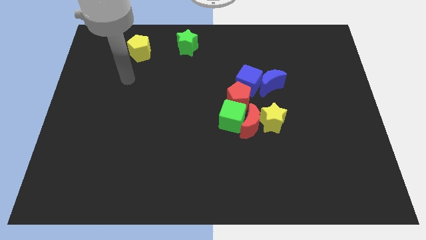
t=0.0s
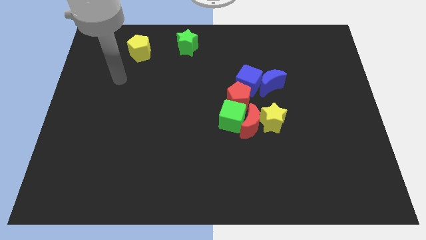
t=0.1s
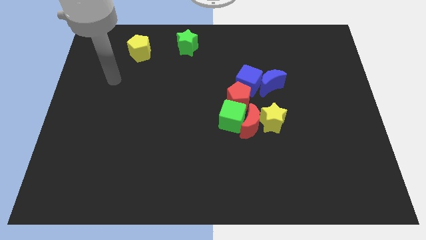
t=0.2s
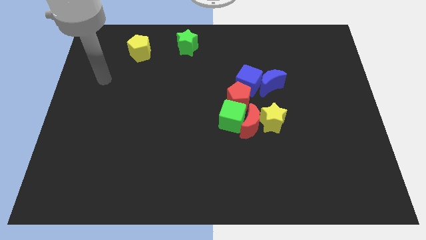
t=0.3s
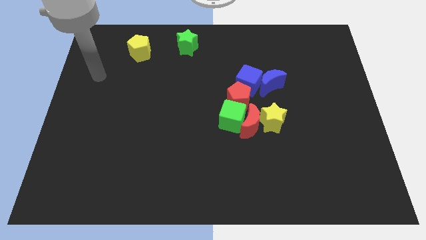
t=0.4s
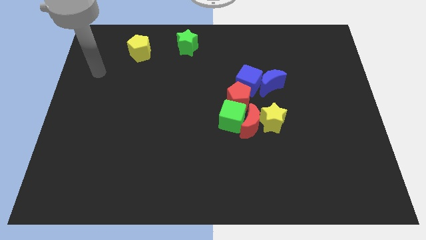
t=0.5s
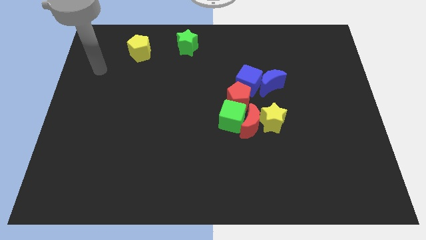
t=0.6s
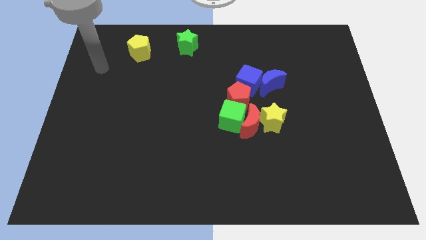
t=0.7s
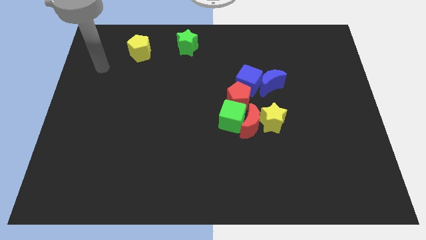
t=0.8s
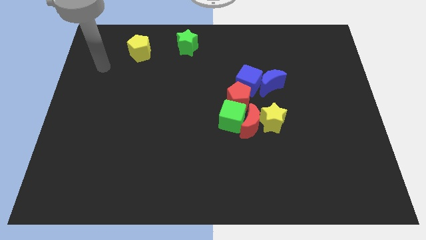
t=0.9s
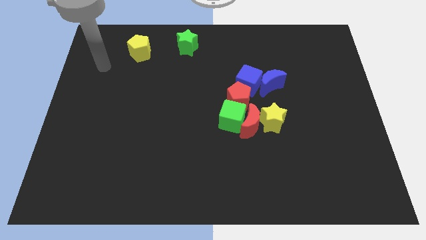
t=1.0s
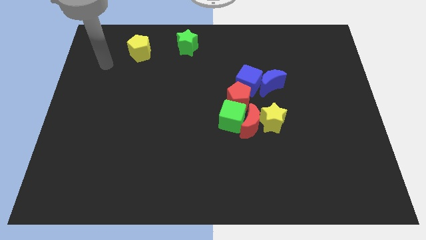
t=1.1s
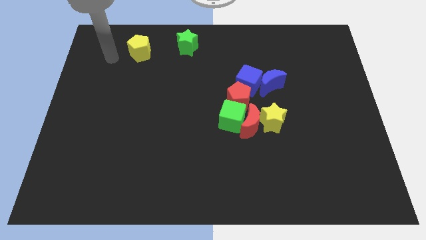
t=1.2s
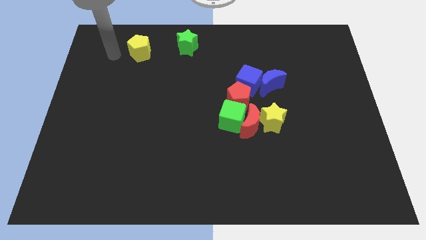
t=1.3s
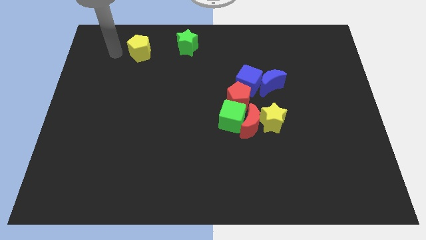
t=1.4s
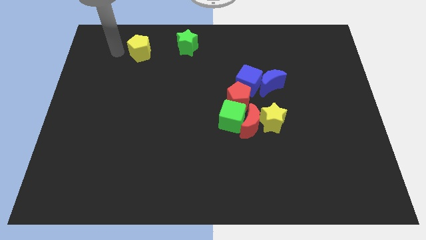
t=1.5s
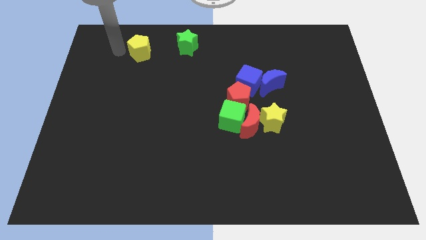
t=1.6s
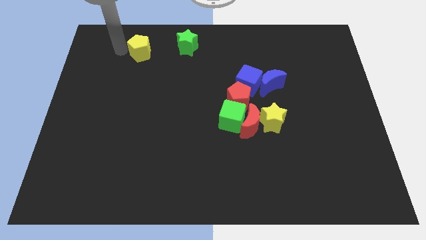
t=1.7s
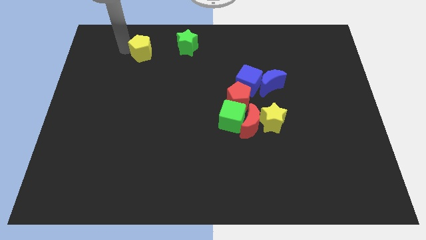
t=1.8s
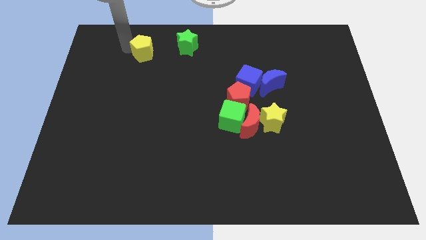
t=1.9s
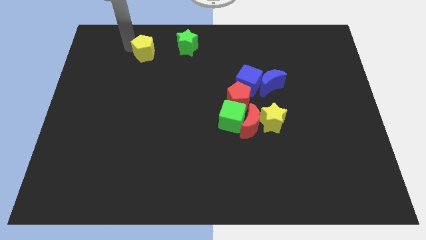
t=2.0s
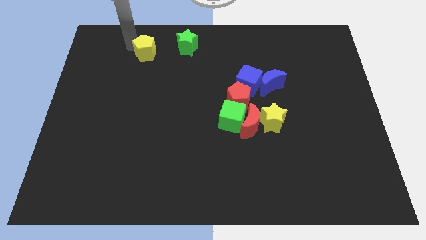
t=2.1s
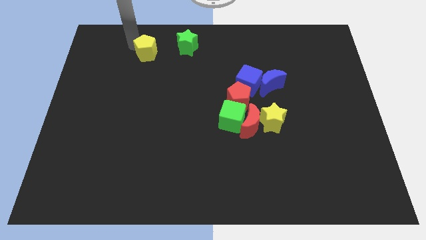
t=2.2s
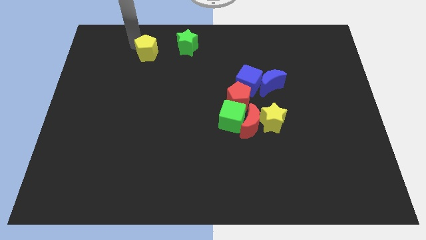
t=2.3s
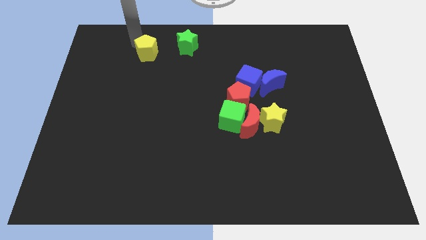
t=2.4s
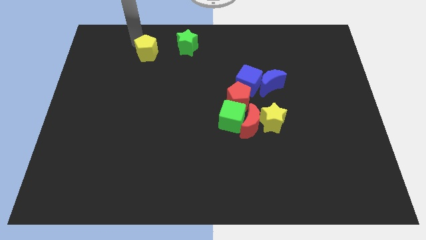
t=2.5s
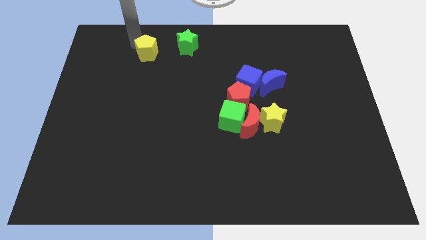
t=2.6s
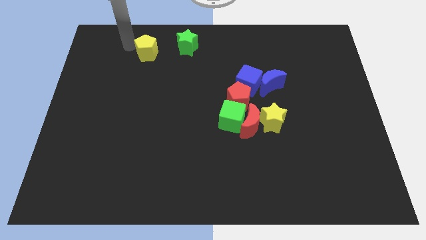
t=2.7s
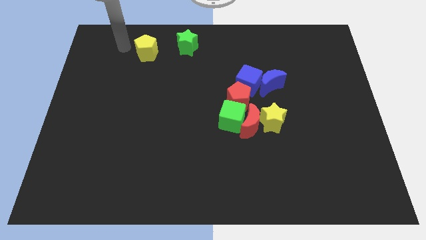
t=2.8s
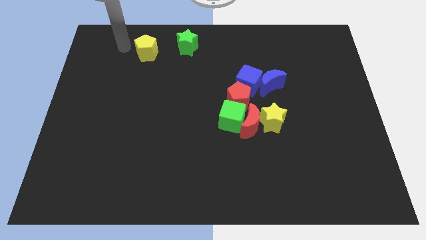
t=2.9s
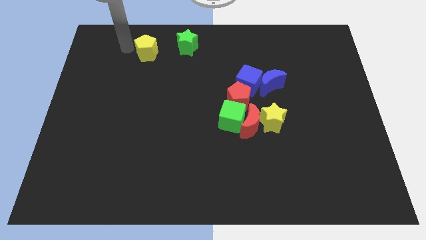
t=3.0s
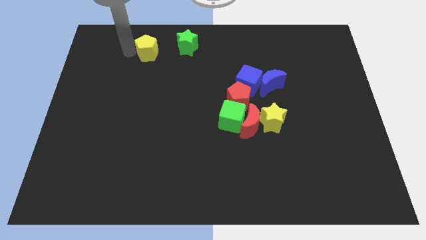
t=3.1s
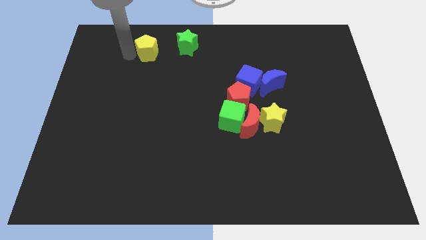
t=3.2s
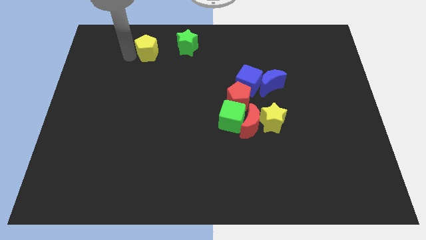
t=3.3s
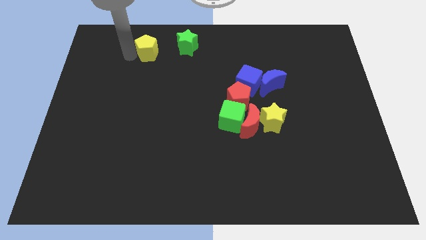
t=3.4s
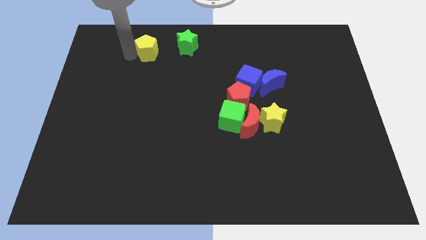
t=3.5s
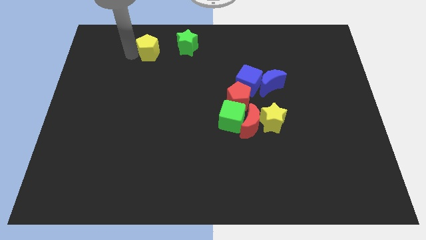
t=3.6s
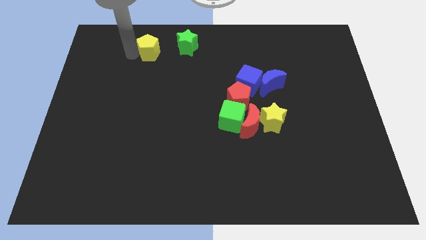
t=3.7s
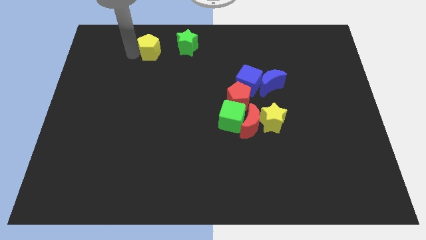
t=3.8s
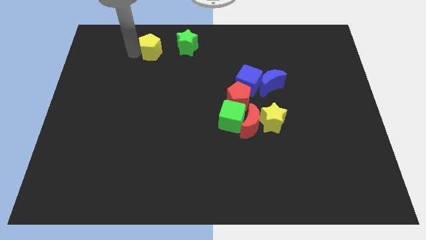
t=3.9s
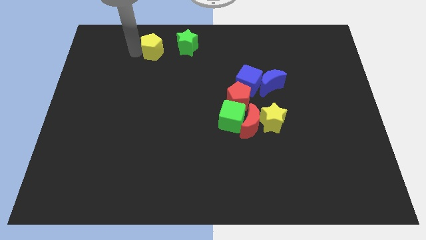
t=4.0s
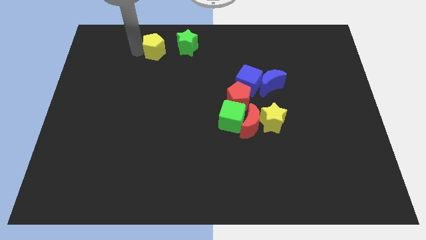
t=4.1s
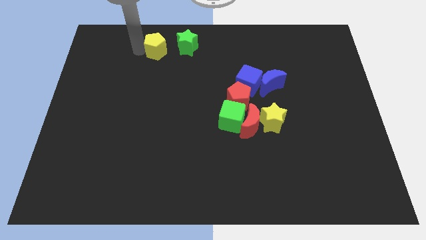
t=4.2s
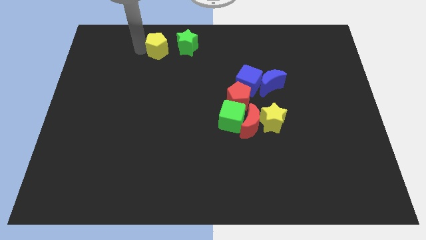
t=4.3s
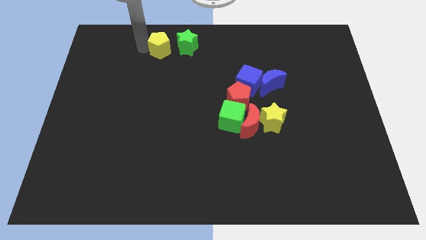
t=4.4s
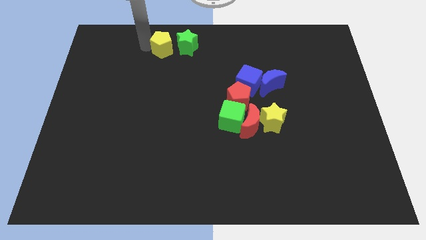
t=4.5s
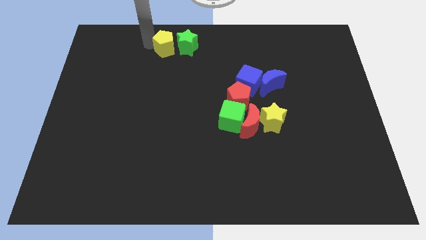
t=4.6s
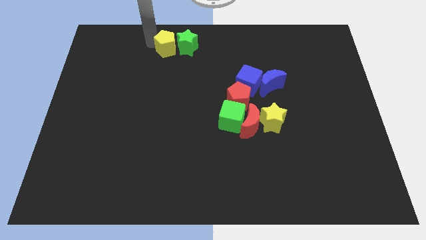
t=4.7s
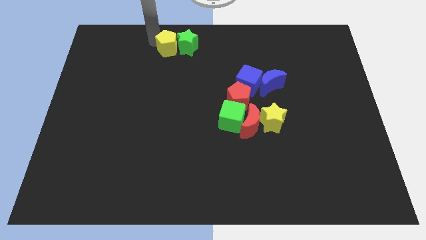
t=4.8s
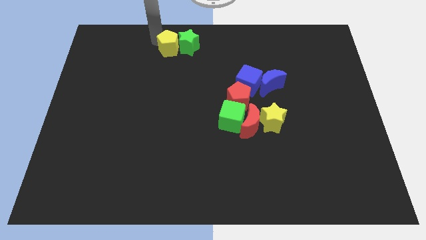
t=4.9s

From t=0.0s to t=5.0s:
move the yellow pentagon to the left of green star

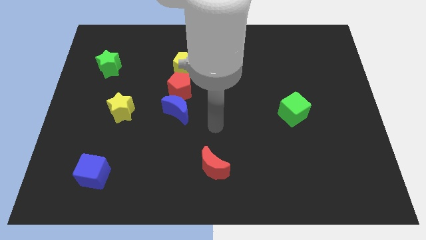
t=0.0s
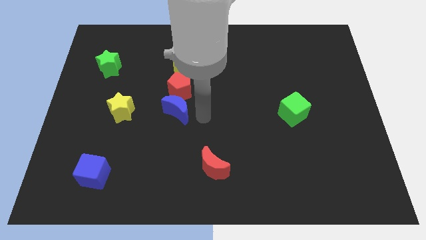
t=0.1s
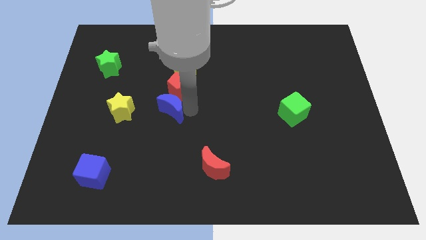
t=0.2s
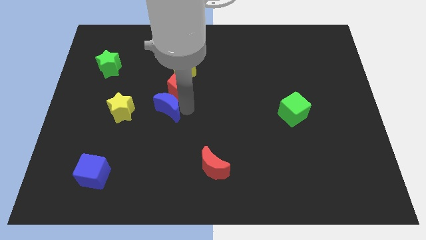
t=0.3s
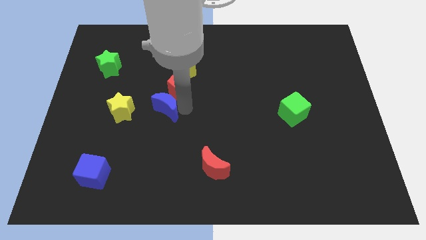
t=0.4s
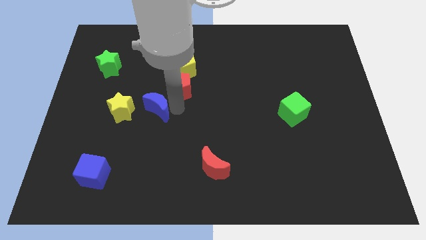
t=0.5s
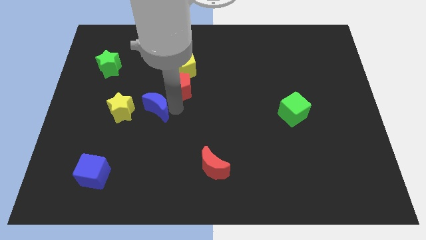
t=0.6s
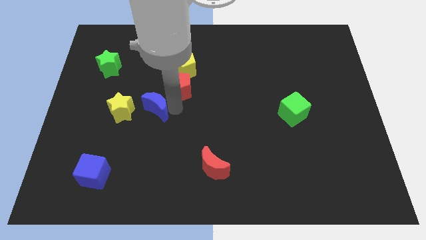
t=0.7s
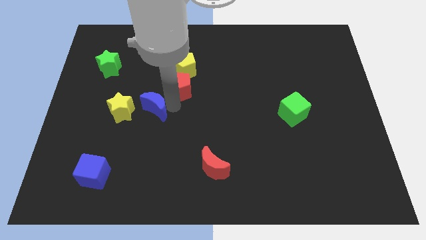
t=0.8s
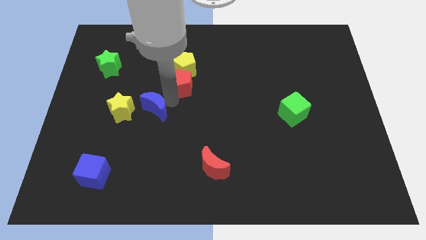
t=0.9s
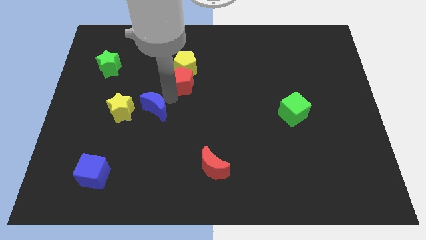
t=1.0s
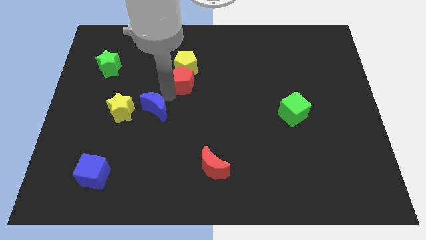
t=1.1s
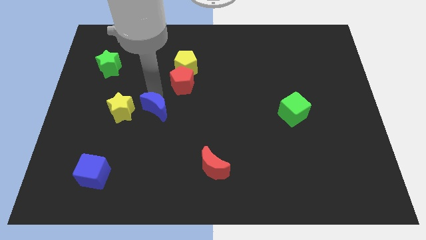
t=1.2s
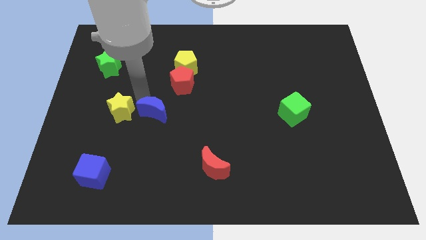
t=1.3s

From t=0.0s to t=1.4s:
separate the blue moon and red pentagon

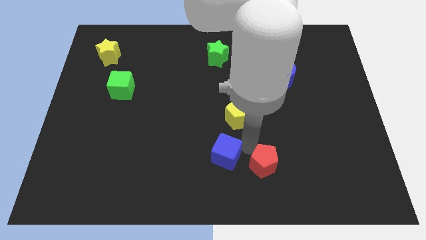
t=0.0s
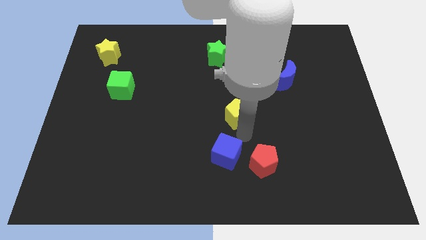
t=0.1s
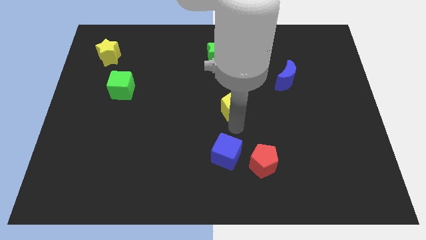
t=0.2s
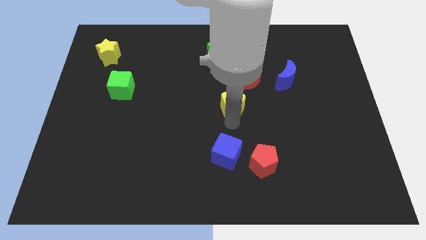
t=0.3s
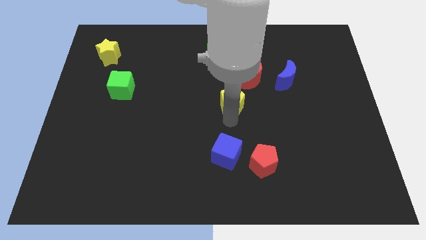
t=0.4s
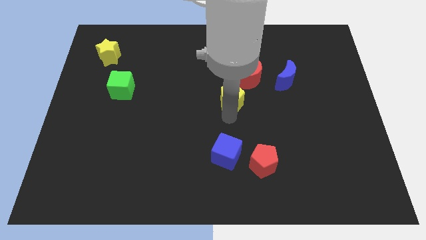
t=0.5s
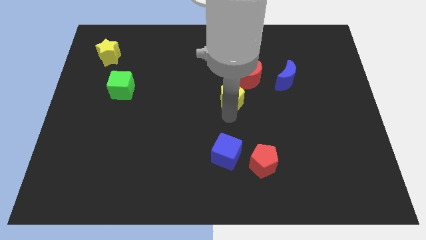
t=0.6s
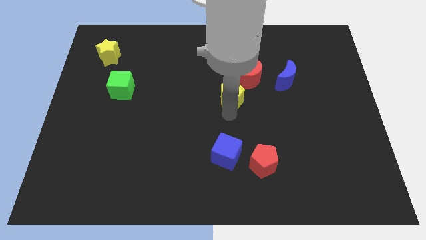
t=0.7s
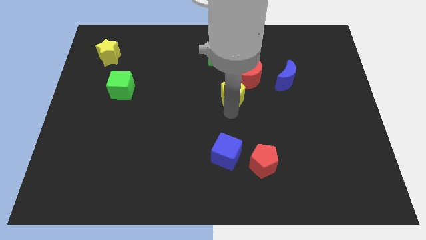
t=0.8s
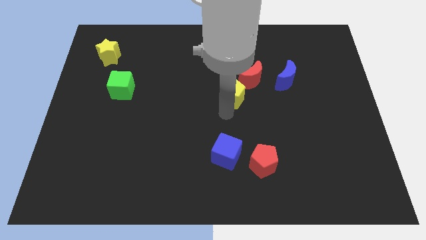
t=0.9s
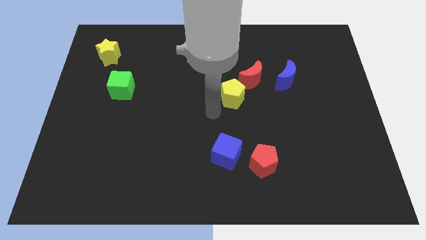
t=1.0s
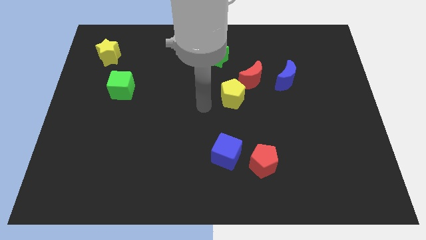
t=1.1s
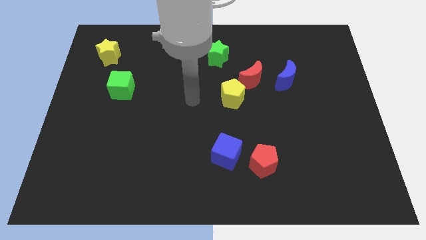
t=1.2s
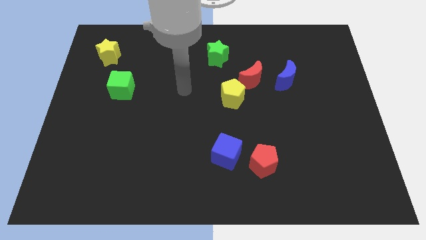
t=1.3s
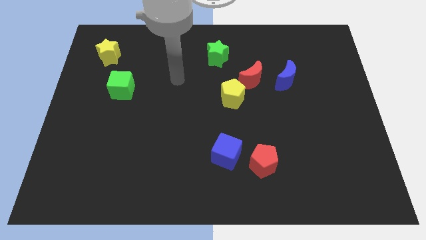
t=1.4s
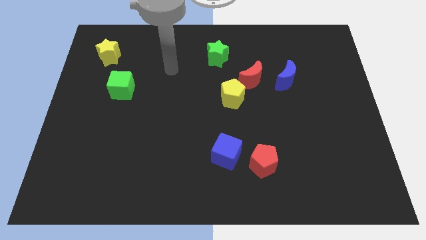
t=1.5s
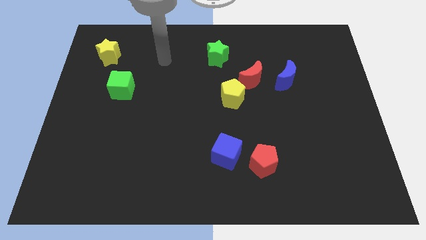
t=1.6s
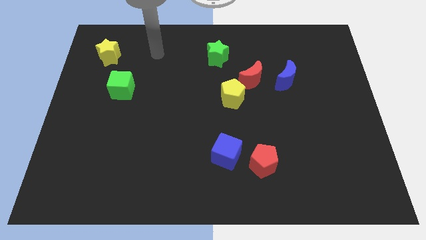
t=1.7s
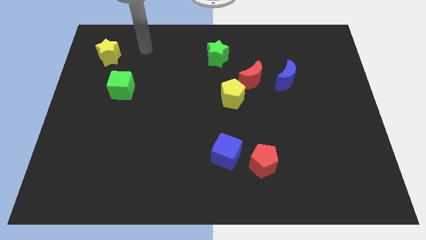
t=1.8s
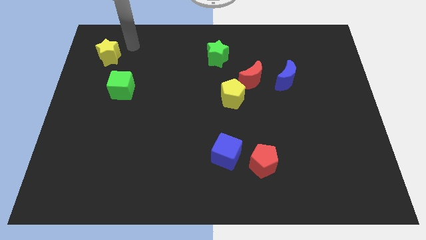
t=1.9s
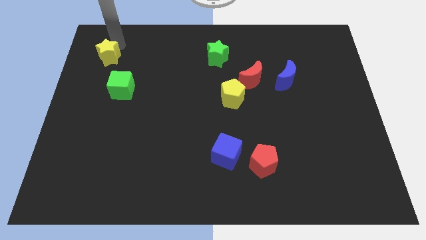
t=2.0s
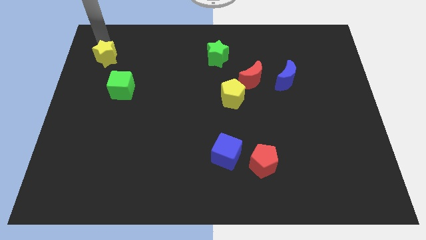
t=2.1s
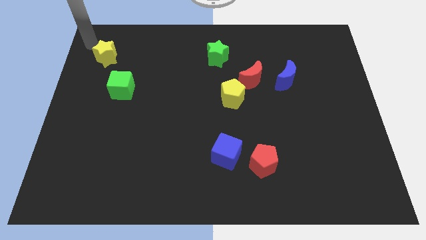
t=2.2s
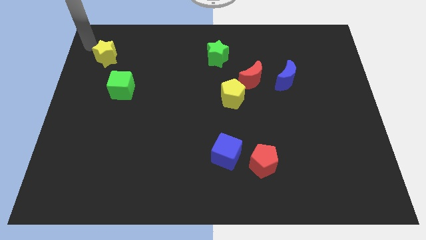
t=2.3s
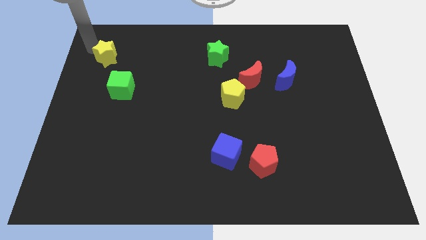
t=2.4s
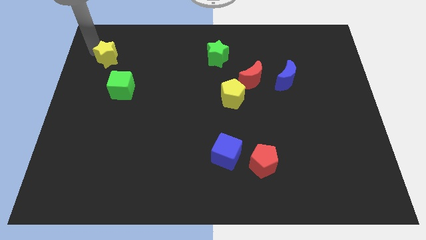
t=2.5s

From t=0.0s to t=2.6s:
place the yellow pentagon at the bottom left side of red moon
